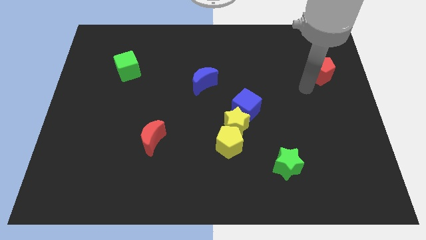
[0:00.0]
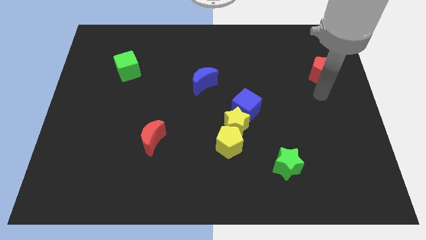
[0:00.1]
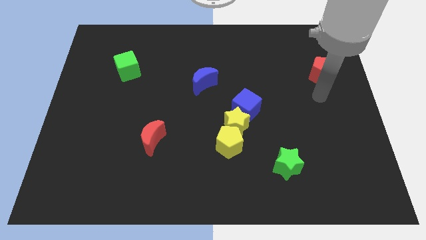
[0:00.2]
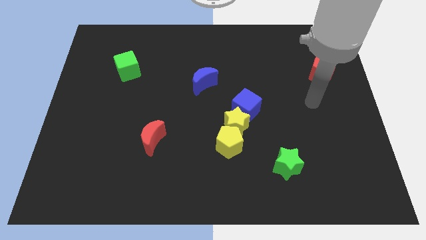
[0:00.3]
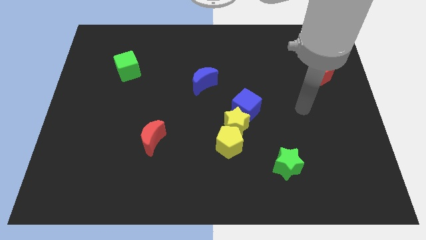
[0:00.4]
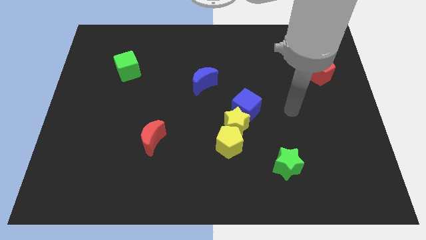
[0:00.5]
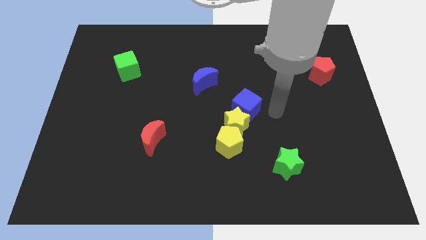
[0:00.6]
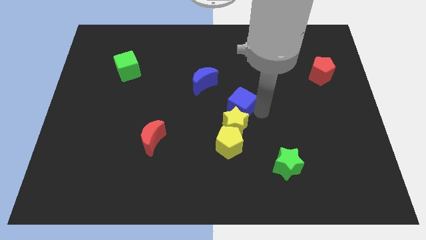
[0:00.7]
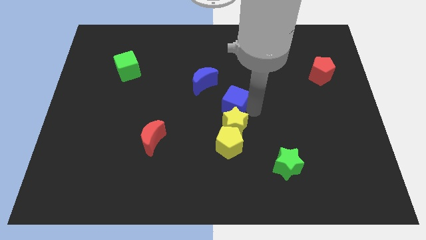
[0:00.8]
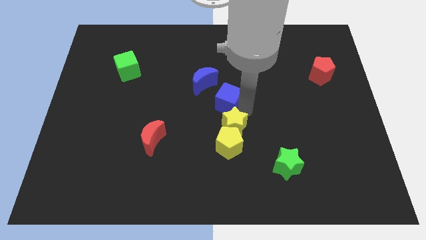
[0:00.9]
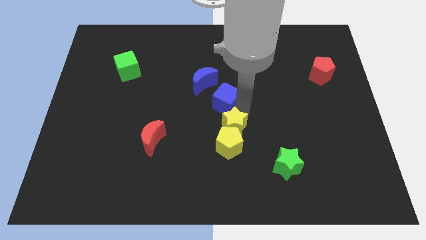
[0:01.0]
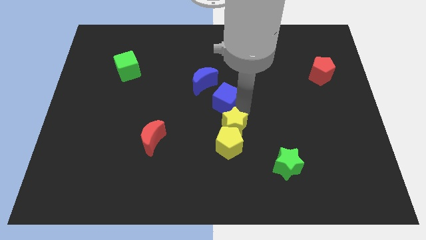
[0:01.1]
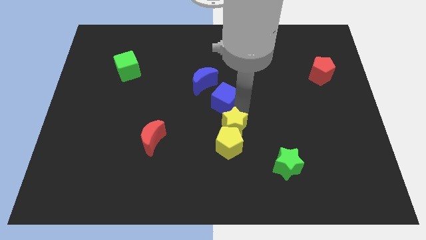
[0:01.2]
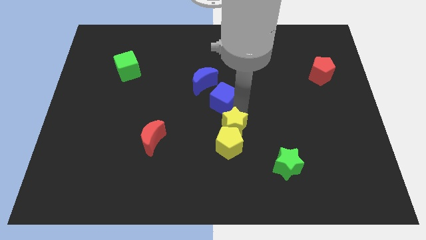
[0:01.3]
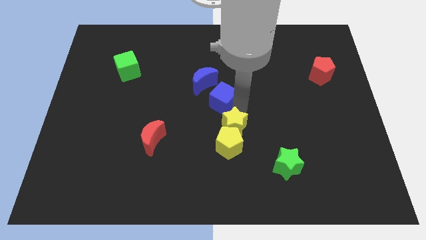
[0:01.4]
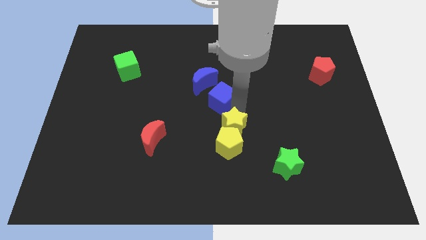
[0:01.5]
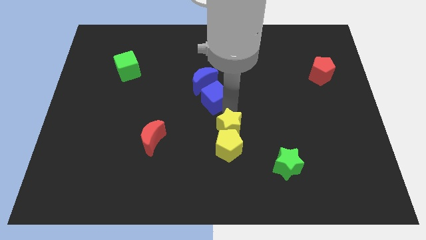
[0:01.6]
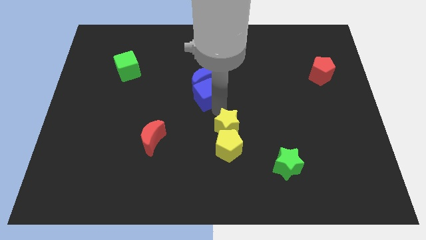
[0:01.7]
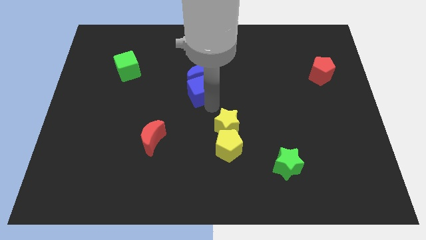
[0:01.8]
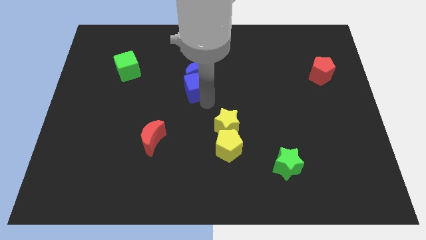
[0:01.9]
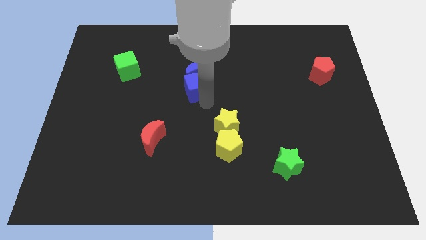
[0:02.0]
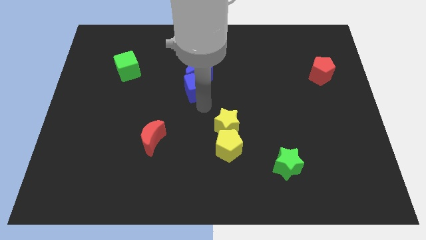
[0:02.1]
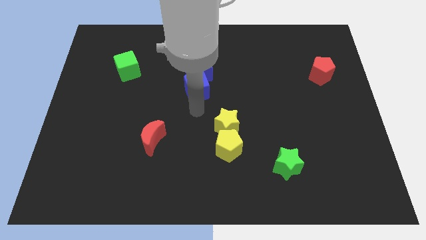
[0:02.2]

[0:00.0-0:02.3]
push the blue cube slightly to the left

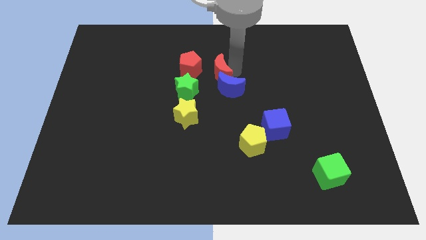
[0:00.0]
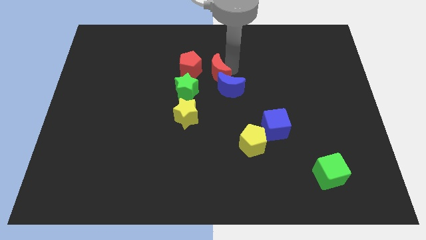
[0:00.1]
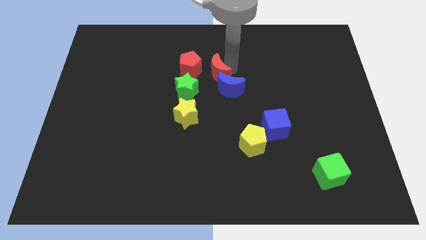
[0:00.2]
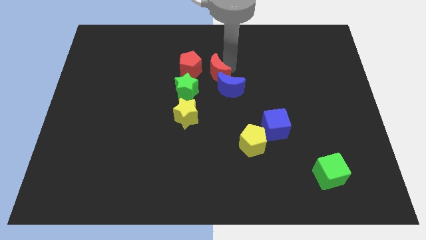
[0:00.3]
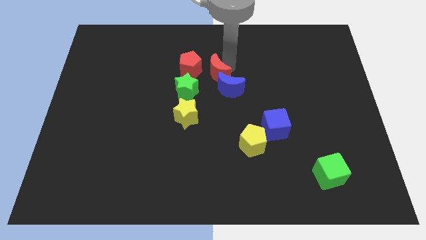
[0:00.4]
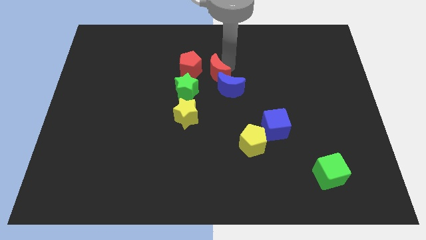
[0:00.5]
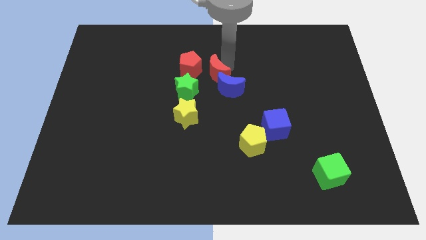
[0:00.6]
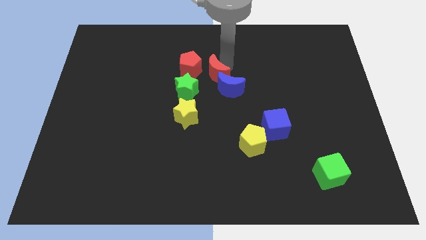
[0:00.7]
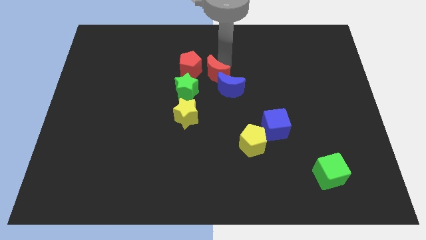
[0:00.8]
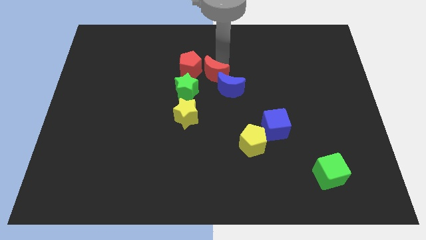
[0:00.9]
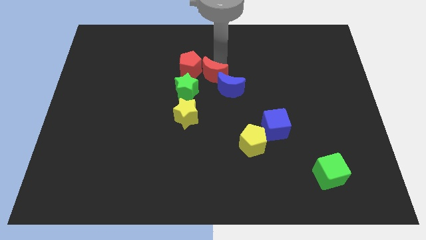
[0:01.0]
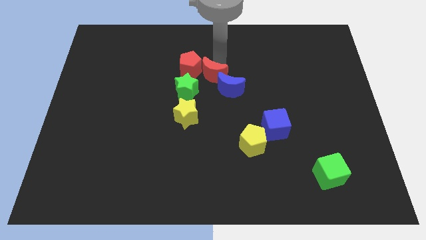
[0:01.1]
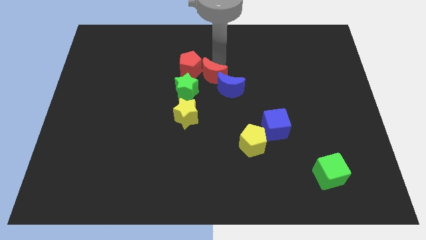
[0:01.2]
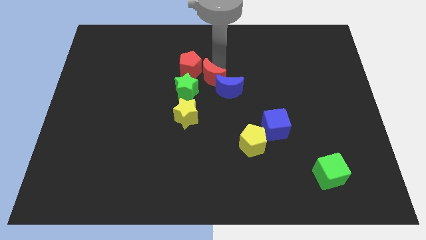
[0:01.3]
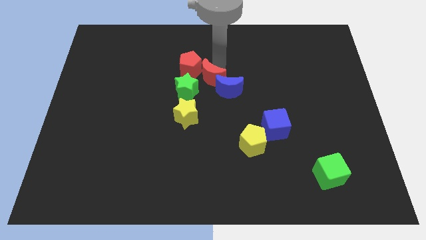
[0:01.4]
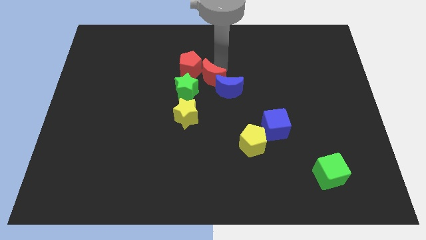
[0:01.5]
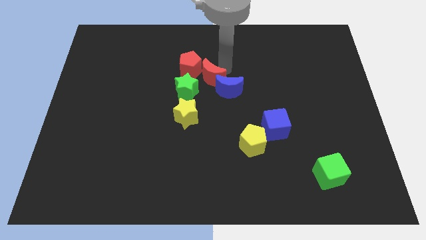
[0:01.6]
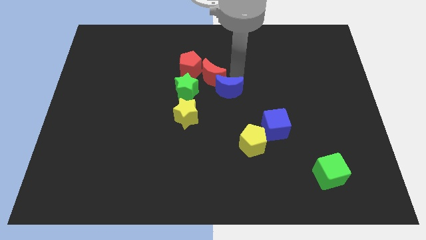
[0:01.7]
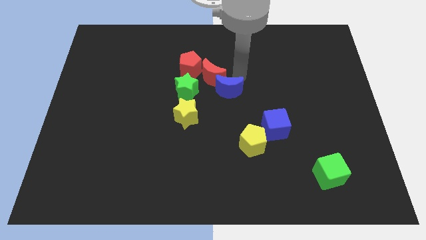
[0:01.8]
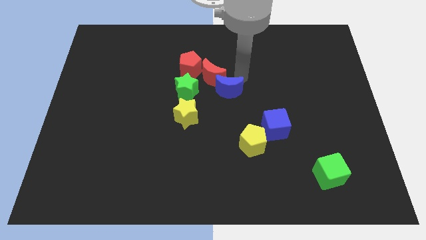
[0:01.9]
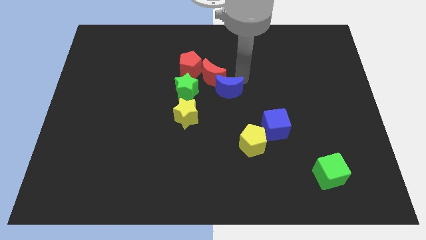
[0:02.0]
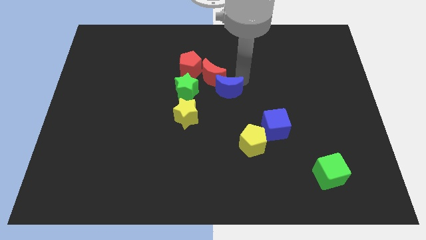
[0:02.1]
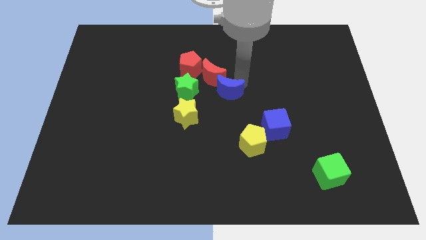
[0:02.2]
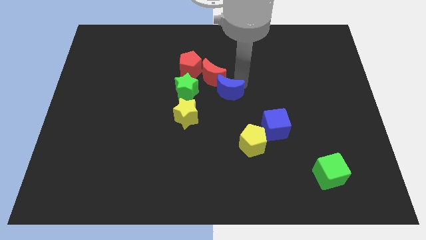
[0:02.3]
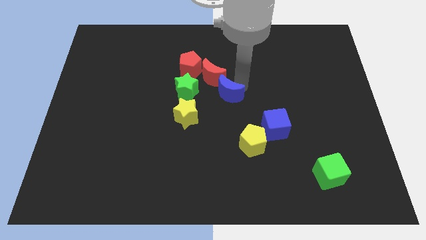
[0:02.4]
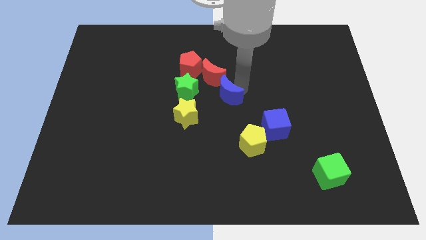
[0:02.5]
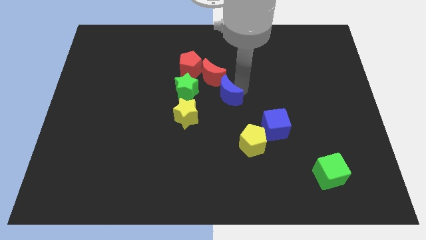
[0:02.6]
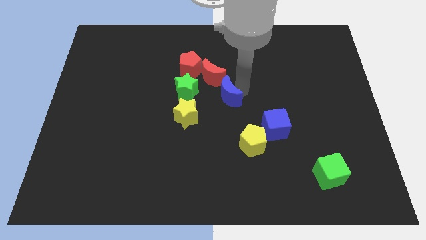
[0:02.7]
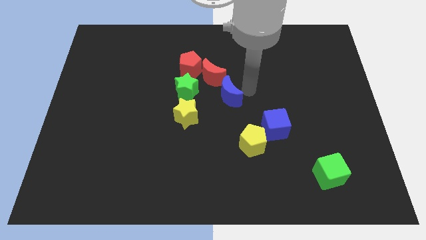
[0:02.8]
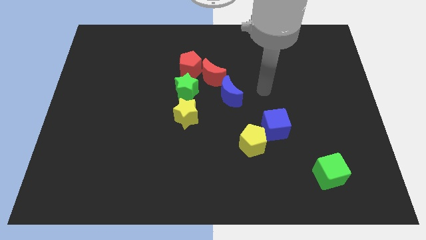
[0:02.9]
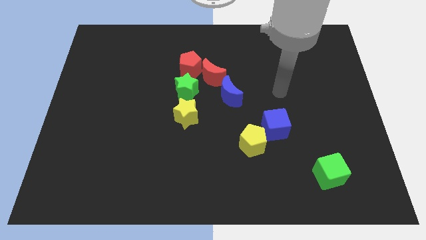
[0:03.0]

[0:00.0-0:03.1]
move the red crescent to the top right side of the green star

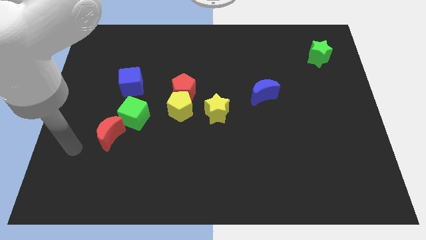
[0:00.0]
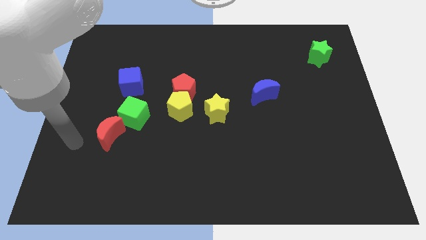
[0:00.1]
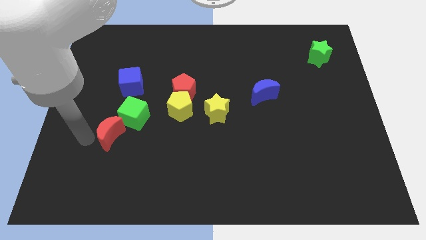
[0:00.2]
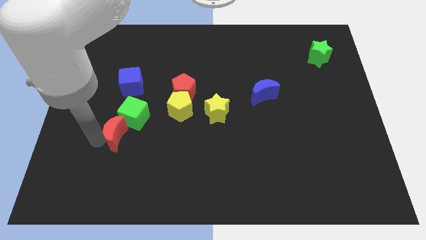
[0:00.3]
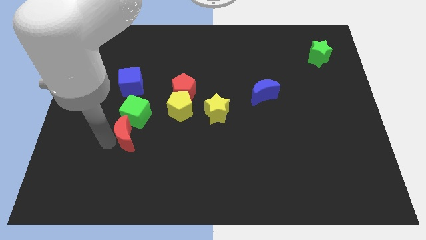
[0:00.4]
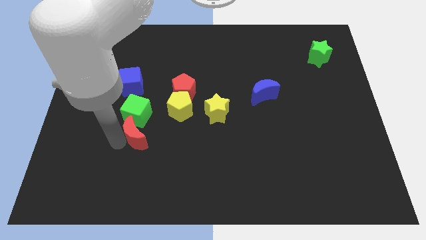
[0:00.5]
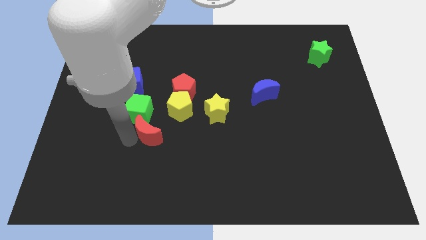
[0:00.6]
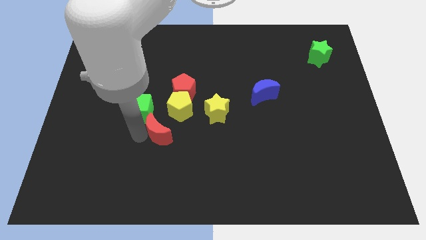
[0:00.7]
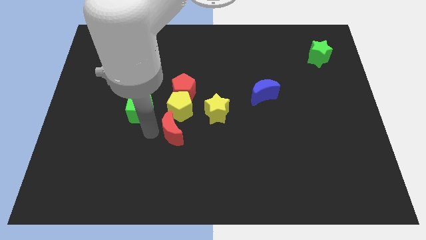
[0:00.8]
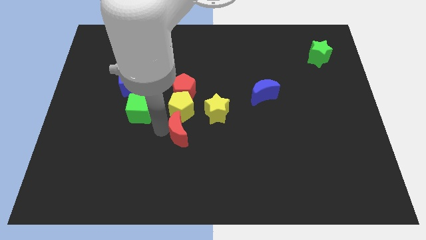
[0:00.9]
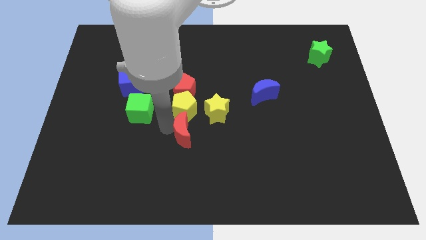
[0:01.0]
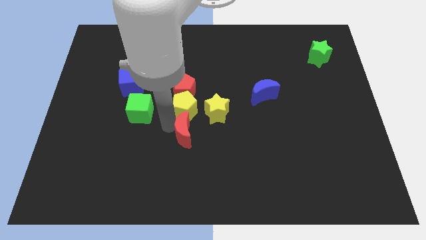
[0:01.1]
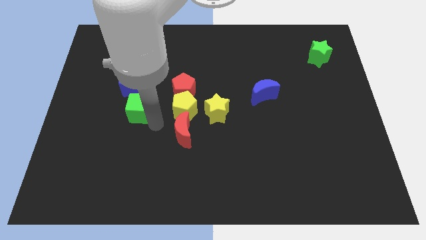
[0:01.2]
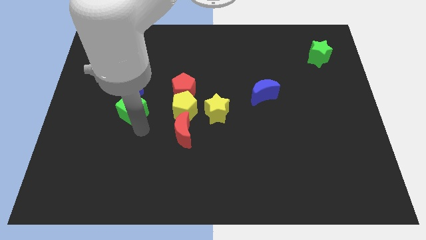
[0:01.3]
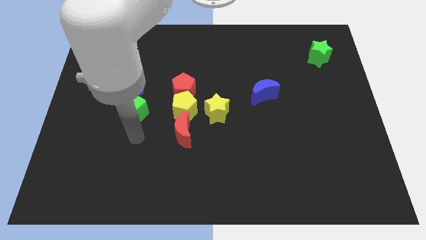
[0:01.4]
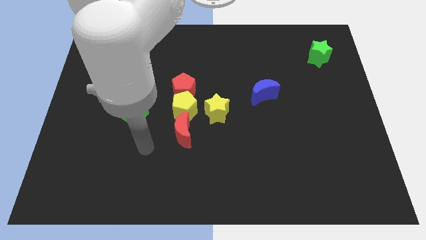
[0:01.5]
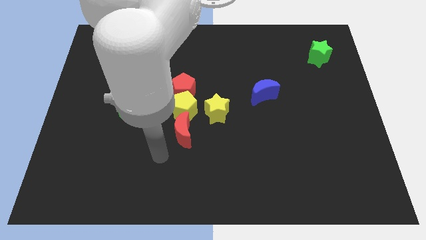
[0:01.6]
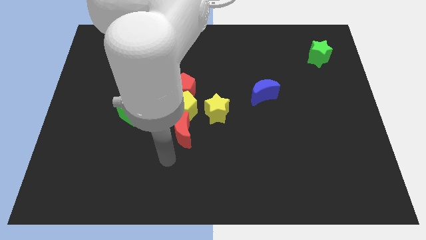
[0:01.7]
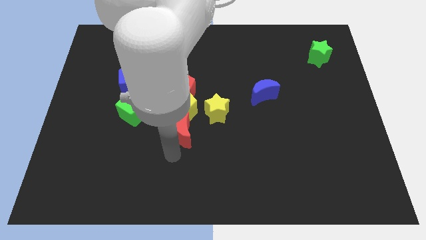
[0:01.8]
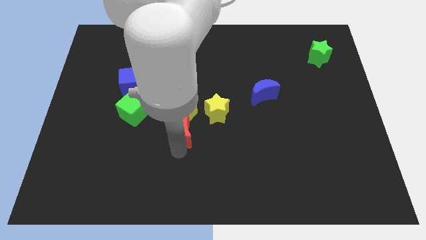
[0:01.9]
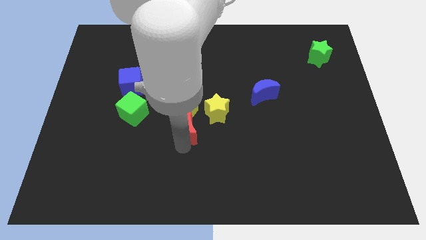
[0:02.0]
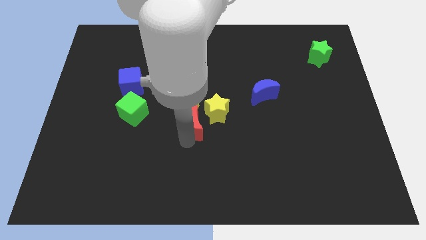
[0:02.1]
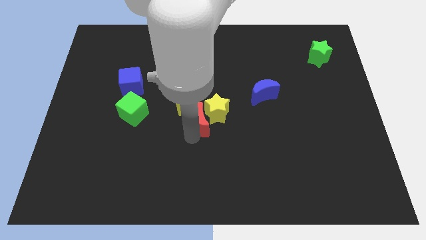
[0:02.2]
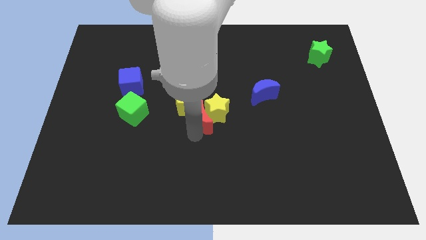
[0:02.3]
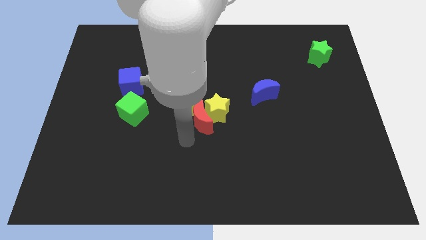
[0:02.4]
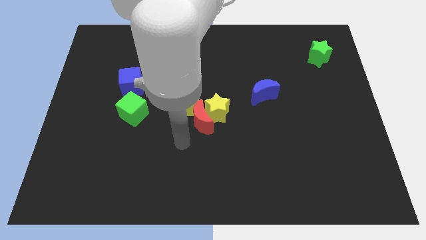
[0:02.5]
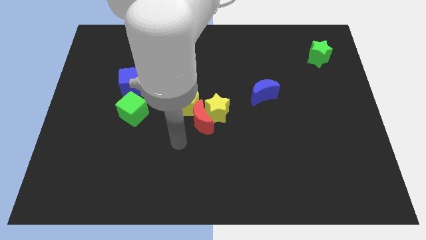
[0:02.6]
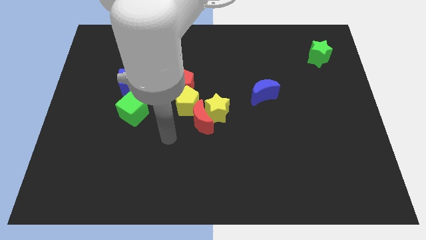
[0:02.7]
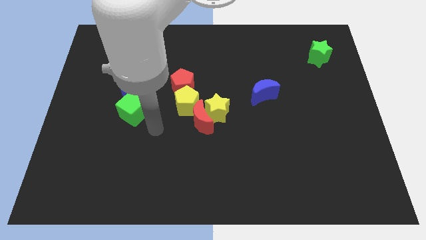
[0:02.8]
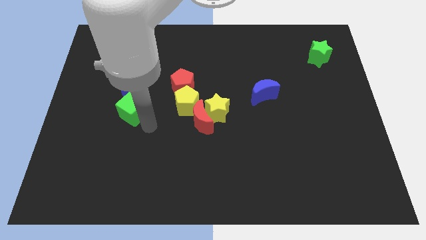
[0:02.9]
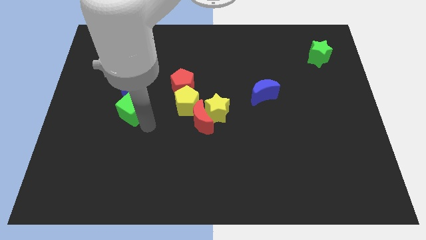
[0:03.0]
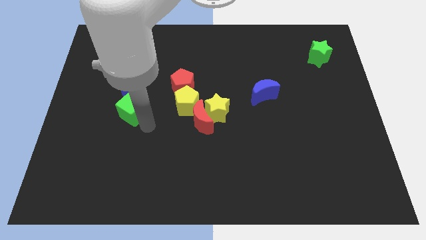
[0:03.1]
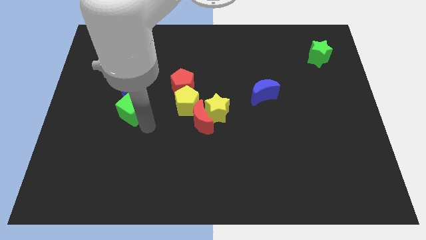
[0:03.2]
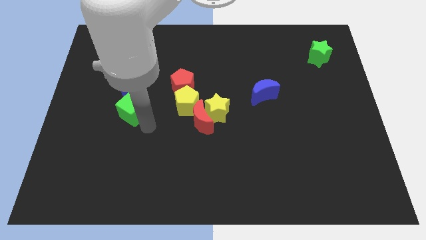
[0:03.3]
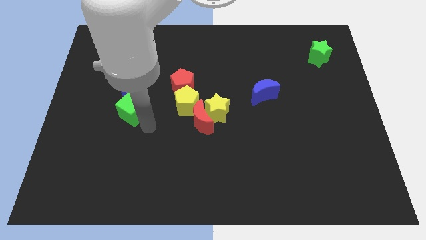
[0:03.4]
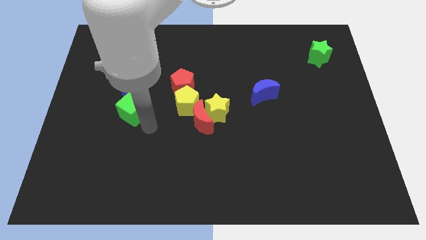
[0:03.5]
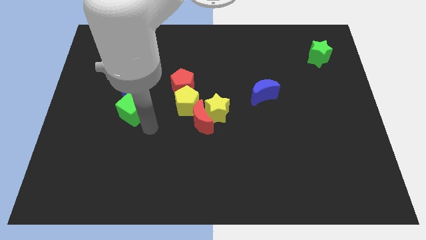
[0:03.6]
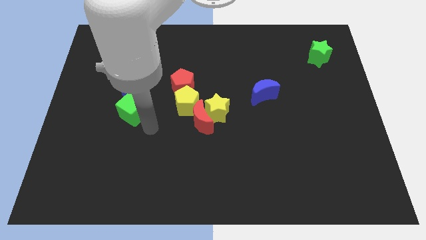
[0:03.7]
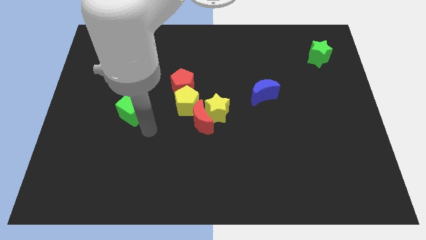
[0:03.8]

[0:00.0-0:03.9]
move the red crescent to the bottom left side of the yellow star
